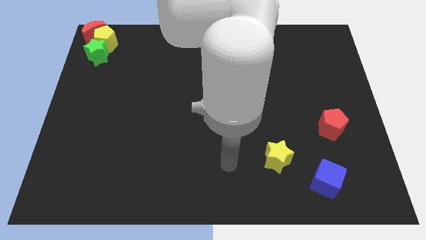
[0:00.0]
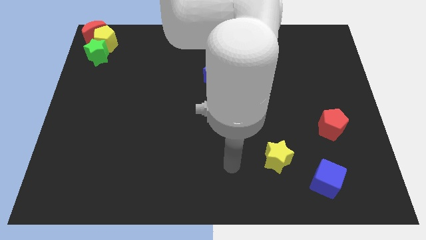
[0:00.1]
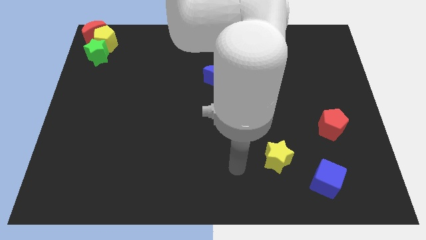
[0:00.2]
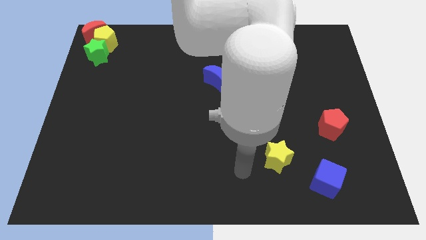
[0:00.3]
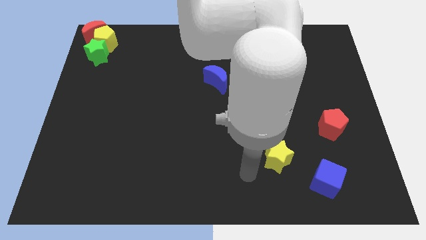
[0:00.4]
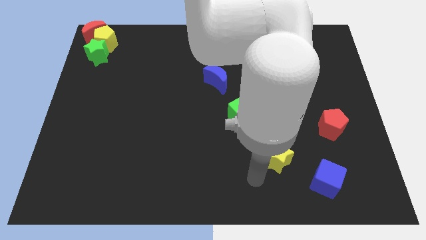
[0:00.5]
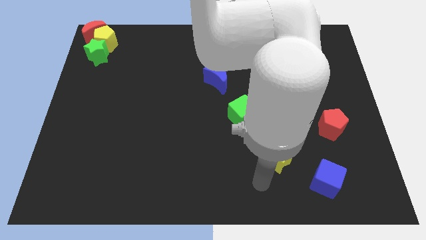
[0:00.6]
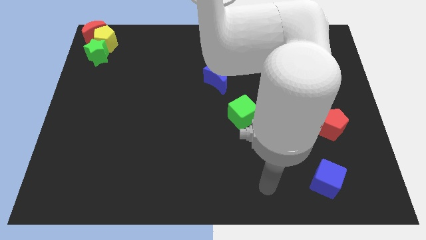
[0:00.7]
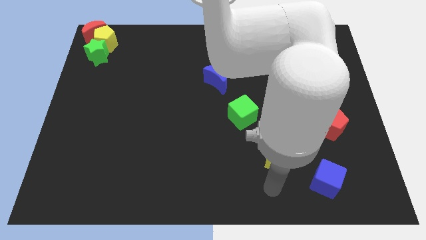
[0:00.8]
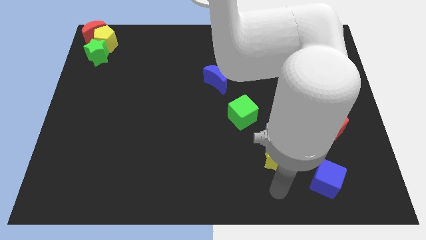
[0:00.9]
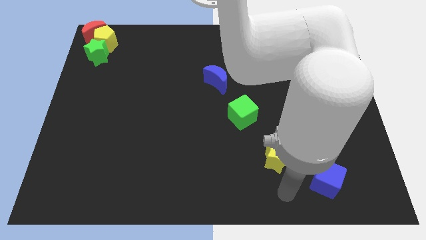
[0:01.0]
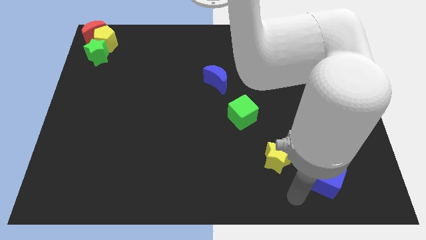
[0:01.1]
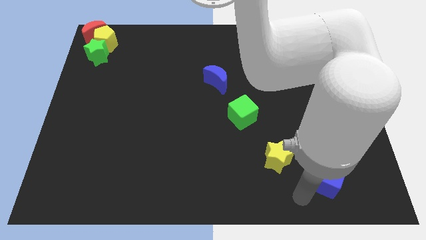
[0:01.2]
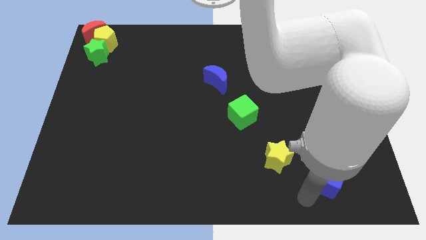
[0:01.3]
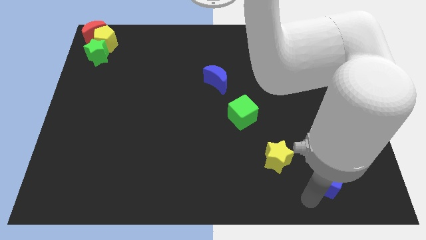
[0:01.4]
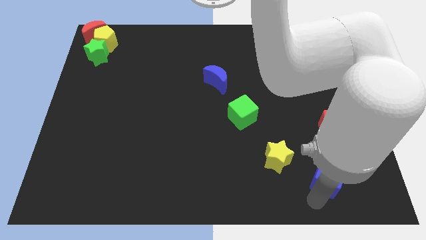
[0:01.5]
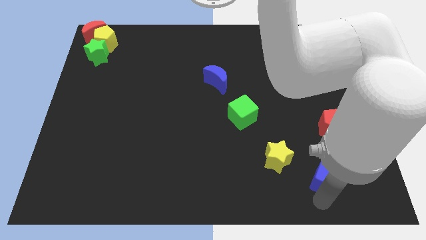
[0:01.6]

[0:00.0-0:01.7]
move your arm below to the blue cube

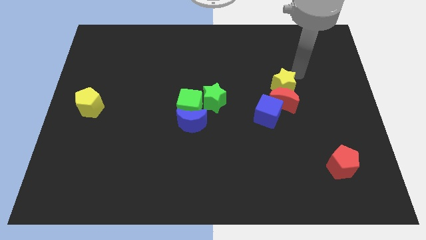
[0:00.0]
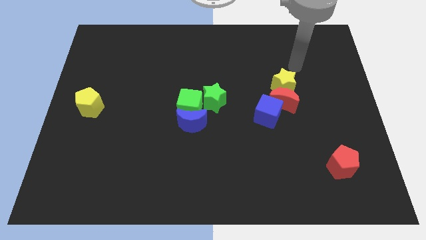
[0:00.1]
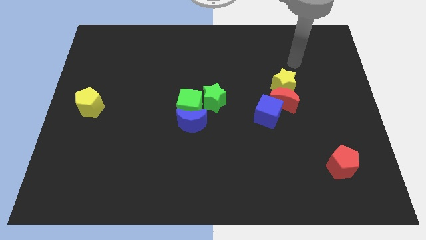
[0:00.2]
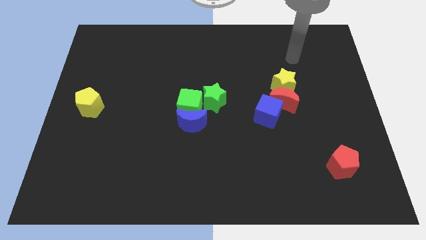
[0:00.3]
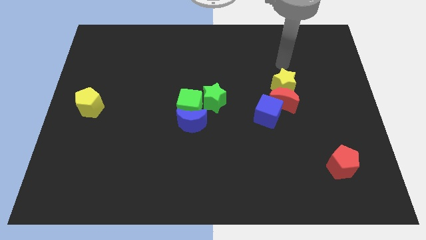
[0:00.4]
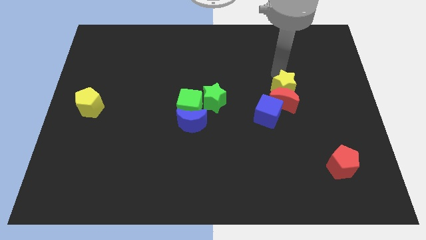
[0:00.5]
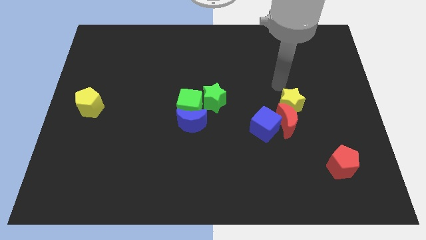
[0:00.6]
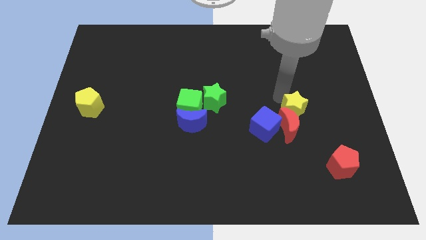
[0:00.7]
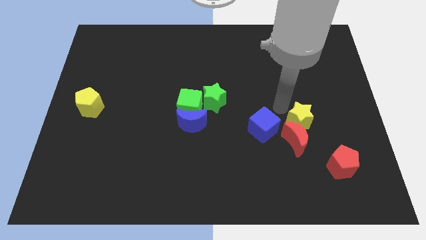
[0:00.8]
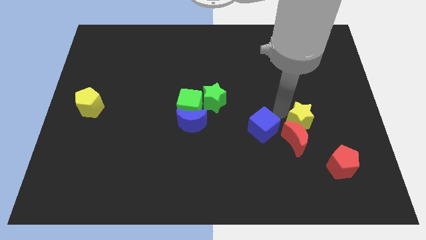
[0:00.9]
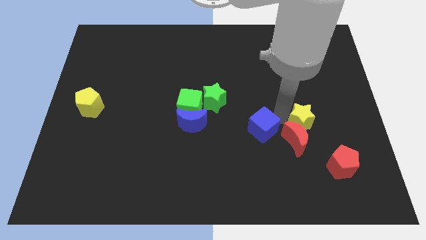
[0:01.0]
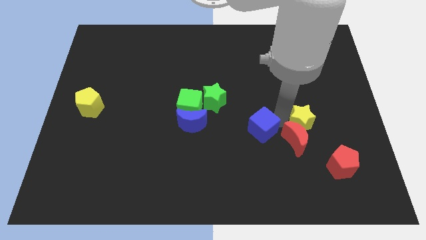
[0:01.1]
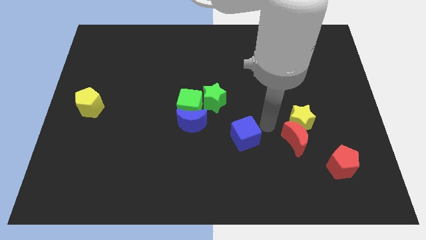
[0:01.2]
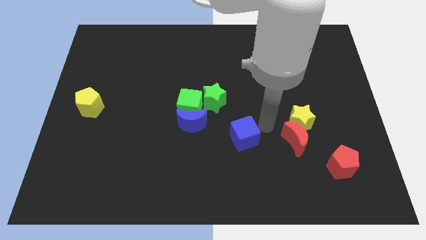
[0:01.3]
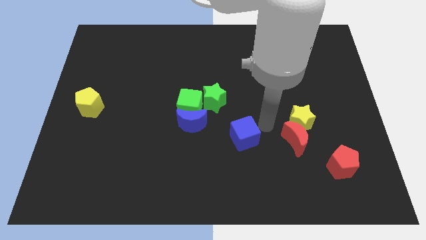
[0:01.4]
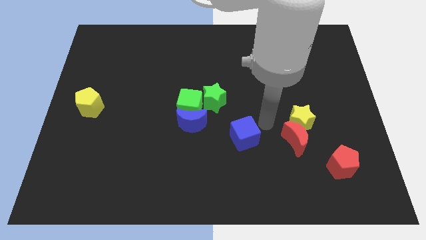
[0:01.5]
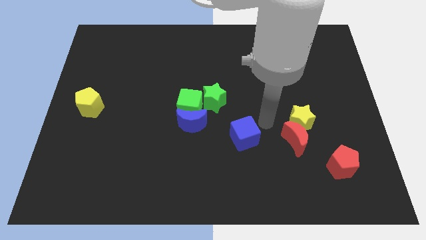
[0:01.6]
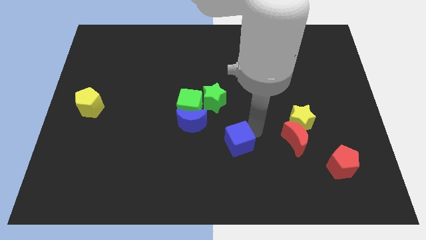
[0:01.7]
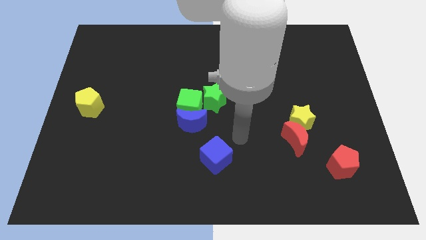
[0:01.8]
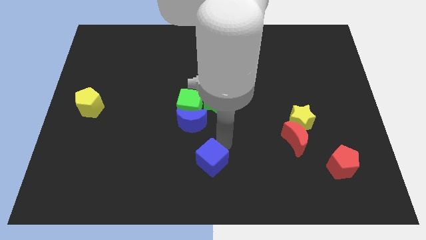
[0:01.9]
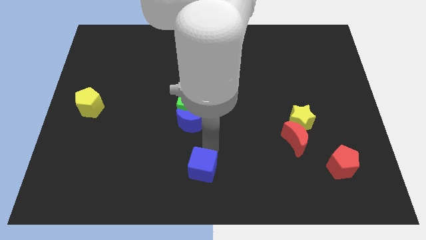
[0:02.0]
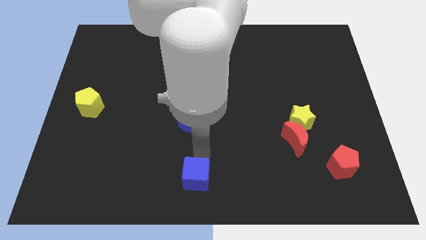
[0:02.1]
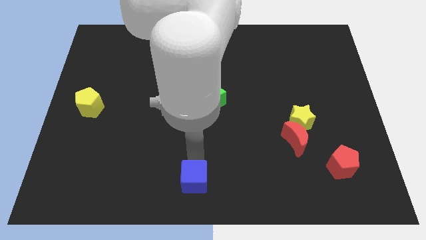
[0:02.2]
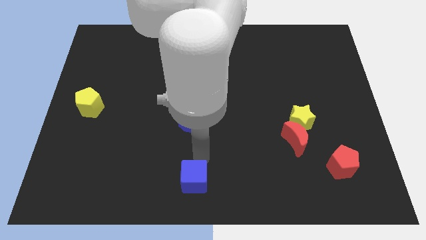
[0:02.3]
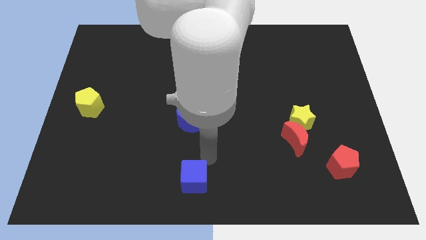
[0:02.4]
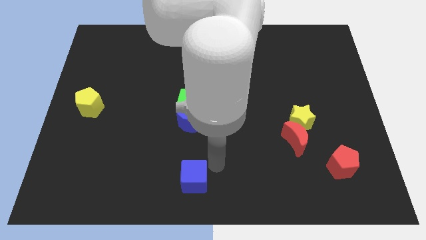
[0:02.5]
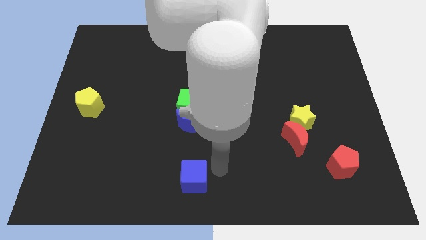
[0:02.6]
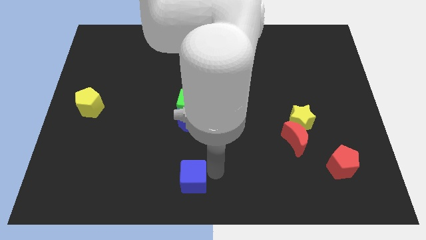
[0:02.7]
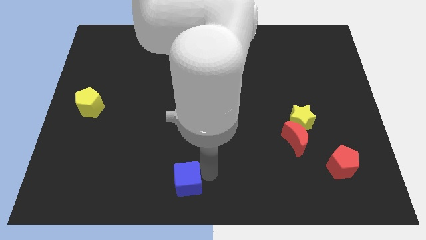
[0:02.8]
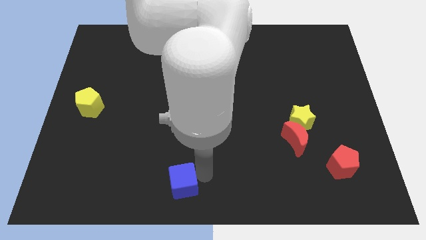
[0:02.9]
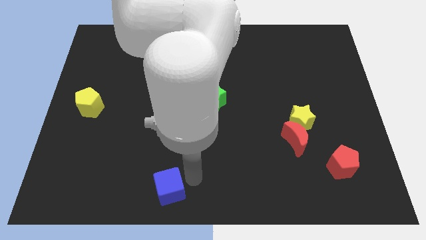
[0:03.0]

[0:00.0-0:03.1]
separate blue cube from yellow star and red moon

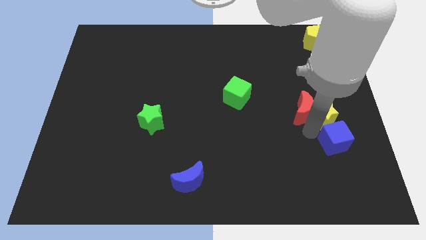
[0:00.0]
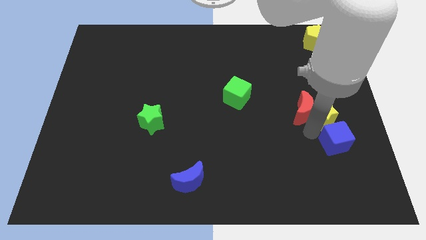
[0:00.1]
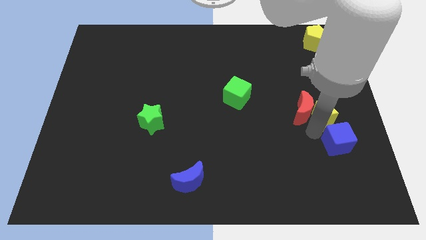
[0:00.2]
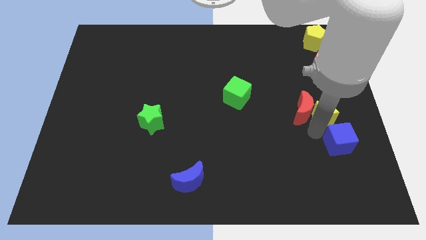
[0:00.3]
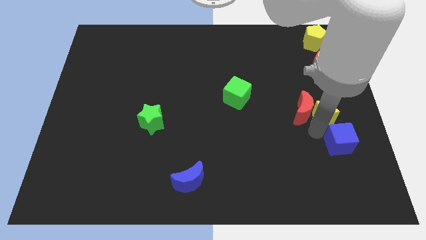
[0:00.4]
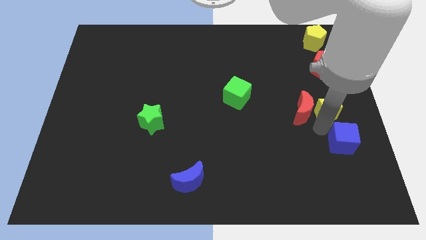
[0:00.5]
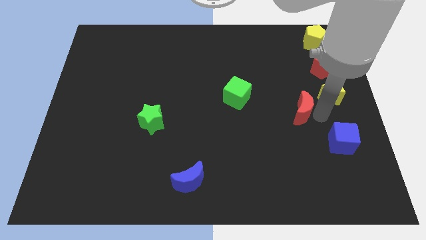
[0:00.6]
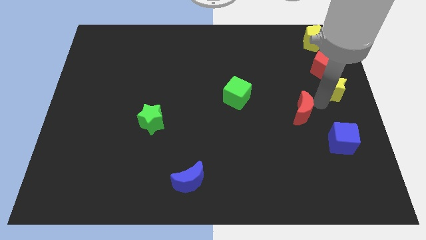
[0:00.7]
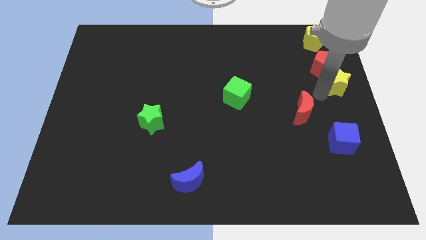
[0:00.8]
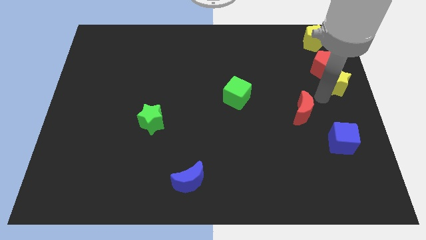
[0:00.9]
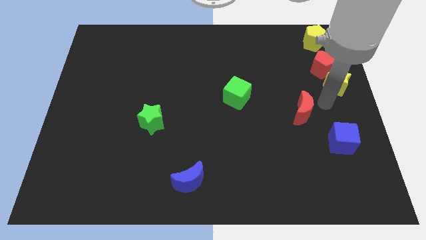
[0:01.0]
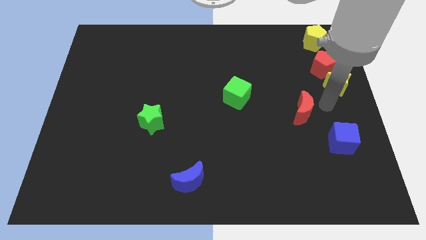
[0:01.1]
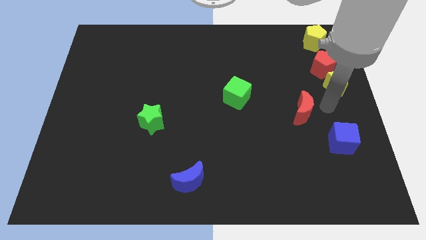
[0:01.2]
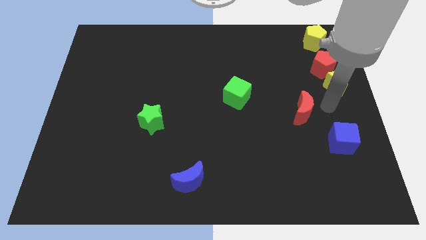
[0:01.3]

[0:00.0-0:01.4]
separate yellow star from red crescent and blue cube

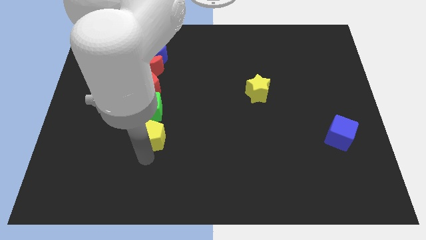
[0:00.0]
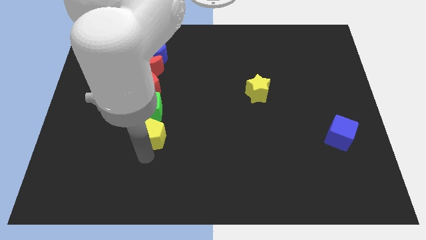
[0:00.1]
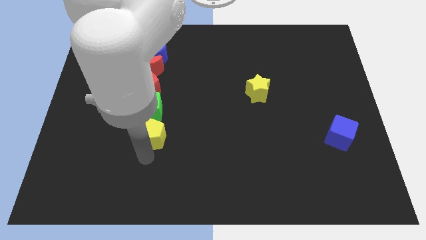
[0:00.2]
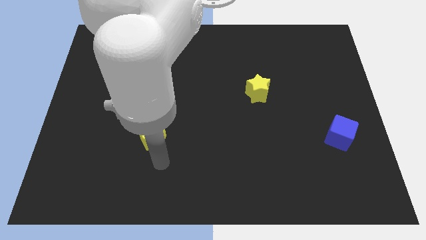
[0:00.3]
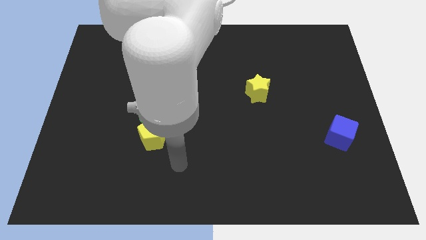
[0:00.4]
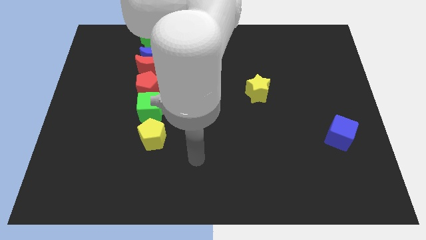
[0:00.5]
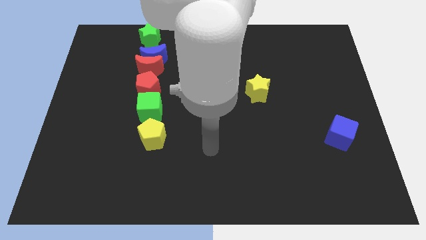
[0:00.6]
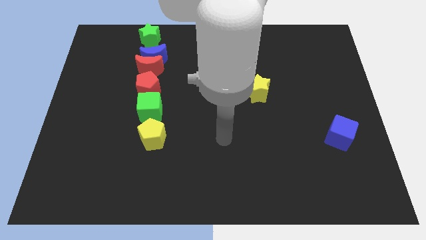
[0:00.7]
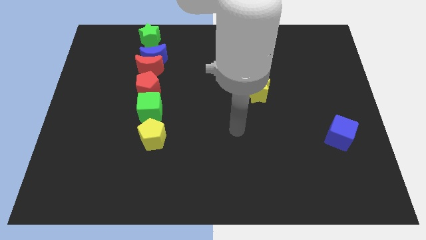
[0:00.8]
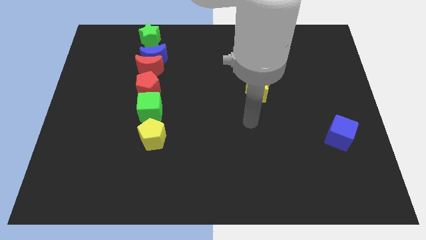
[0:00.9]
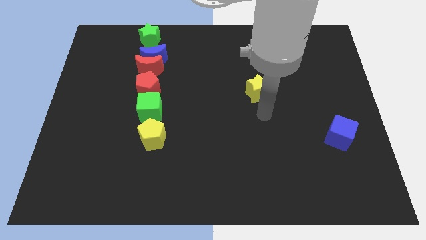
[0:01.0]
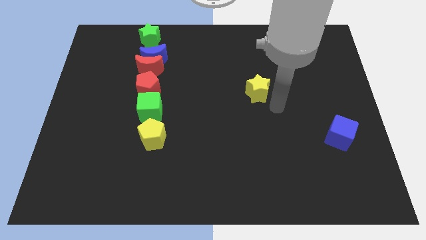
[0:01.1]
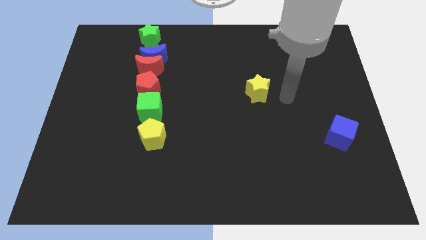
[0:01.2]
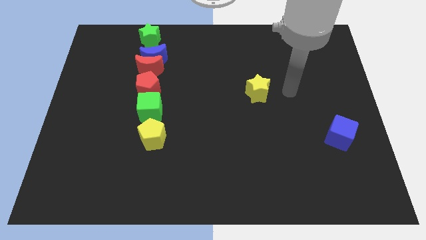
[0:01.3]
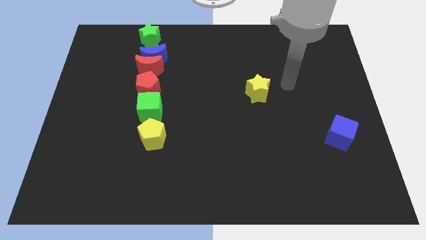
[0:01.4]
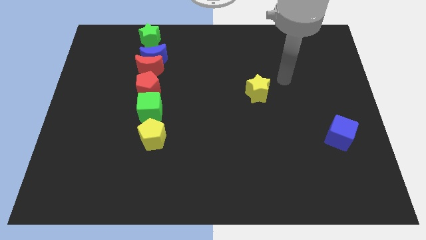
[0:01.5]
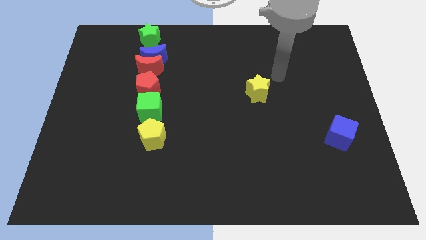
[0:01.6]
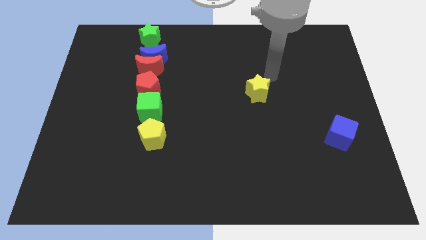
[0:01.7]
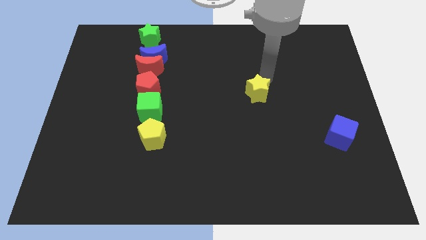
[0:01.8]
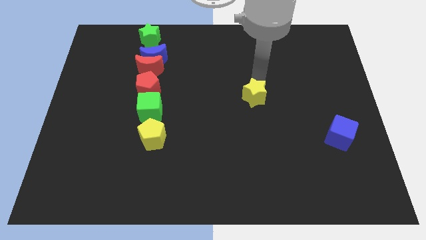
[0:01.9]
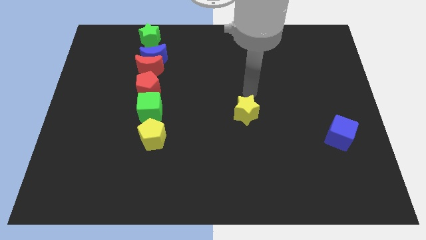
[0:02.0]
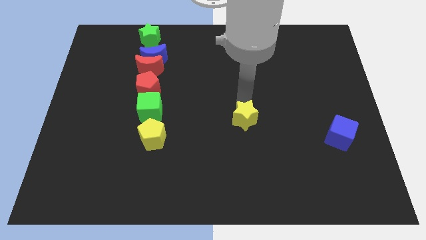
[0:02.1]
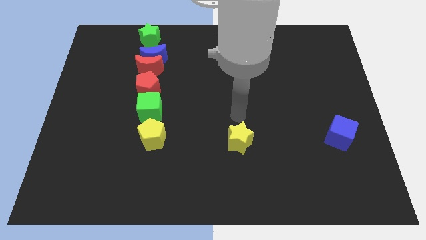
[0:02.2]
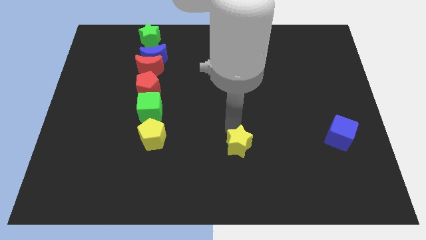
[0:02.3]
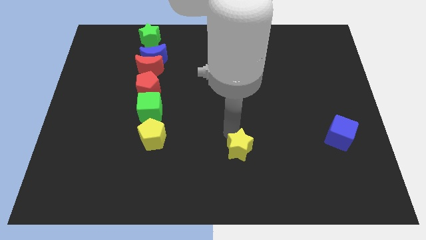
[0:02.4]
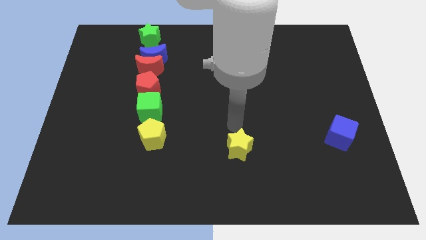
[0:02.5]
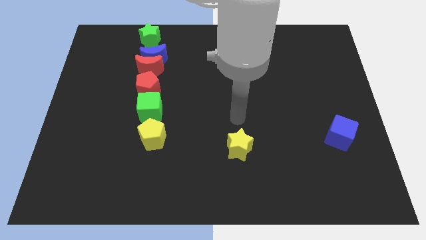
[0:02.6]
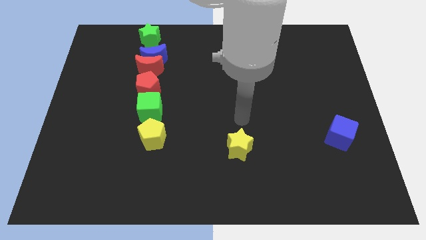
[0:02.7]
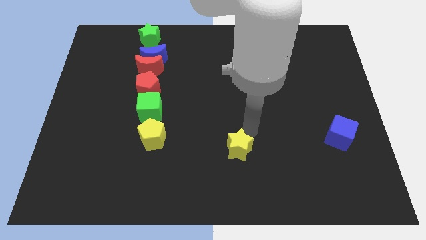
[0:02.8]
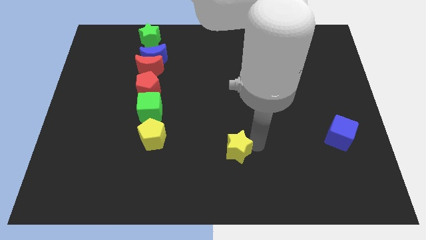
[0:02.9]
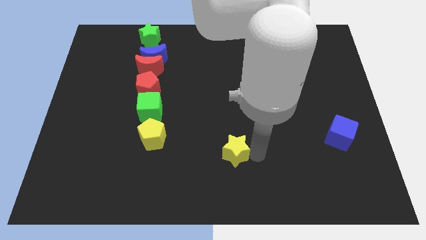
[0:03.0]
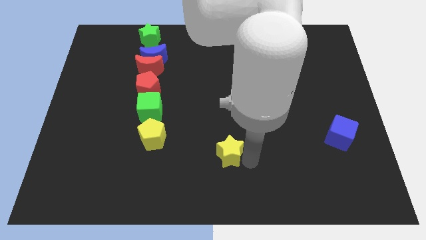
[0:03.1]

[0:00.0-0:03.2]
move your hand away from the yellow pentagon
